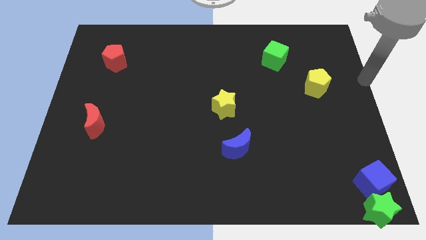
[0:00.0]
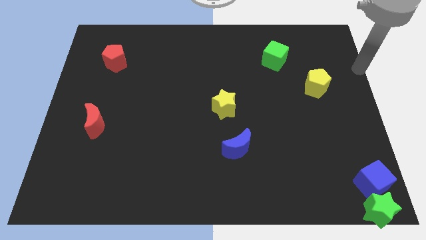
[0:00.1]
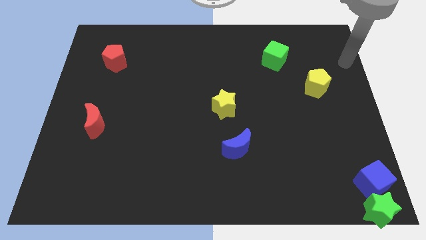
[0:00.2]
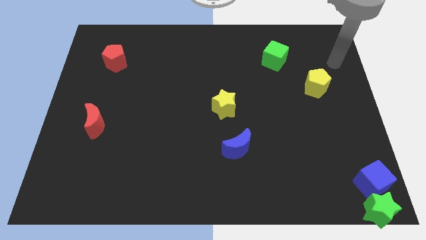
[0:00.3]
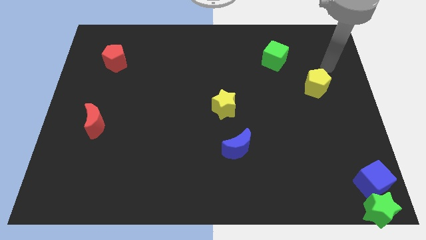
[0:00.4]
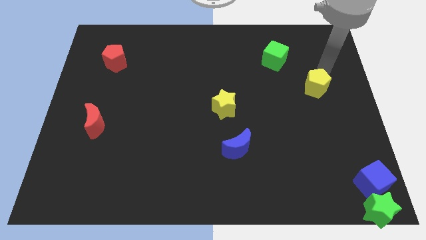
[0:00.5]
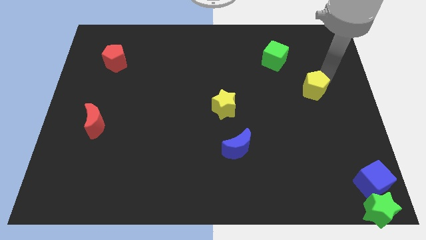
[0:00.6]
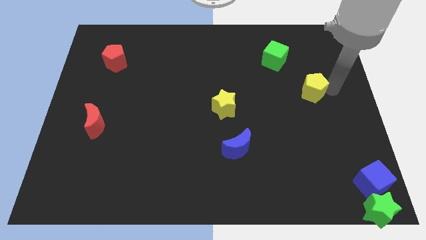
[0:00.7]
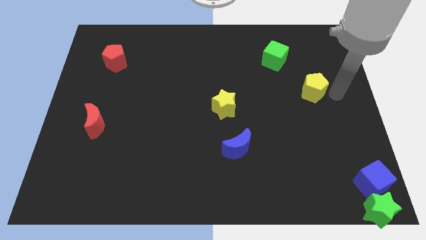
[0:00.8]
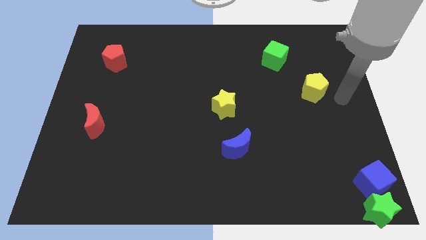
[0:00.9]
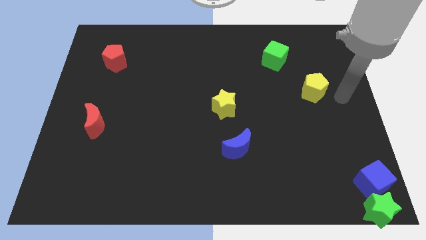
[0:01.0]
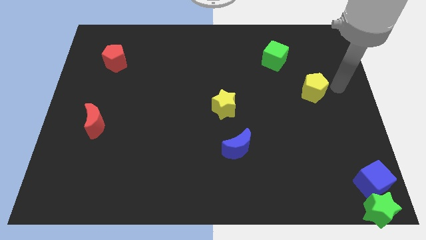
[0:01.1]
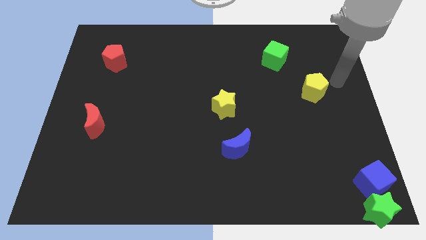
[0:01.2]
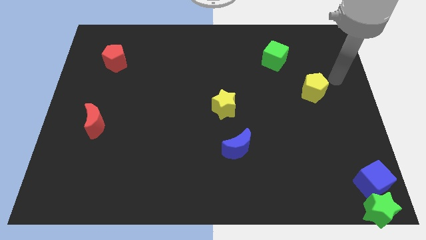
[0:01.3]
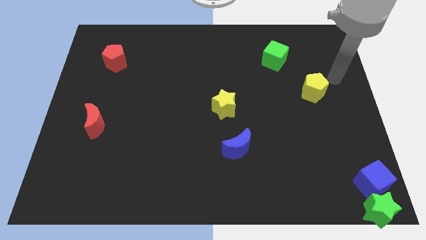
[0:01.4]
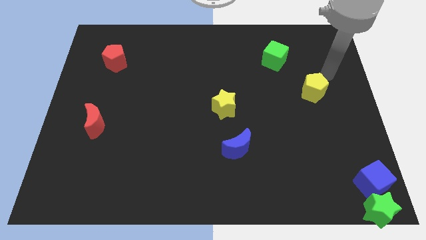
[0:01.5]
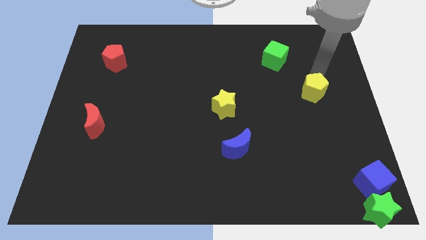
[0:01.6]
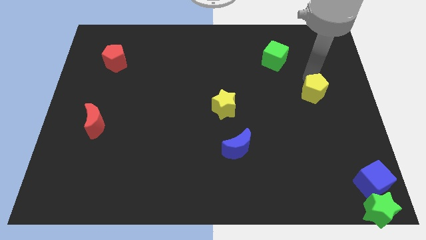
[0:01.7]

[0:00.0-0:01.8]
place the arm above the yellow pentagon

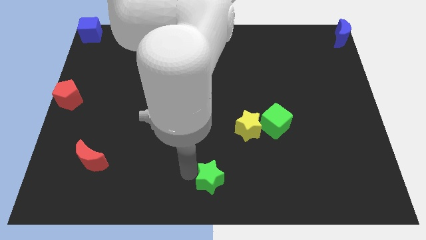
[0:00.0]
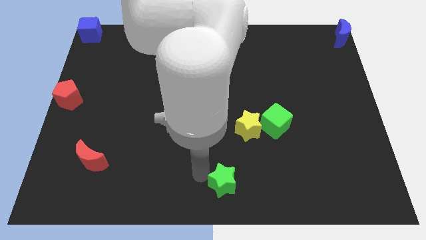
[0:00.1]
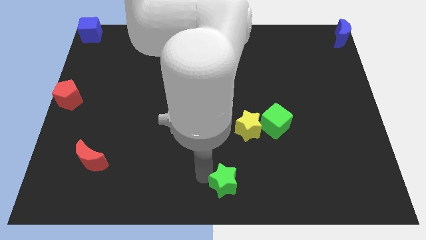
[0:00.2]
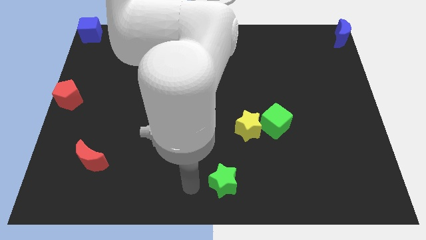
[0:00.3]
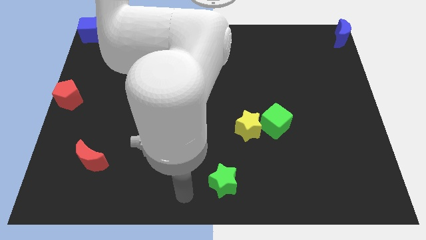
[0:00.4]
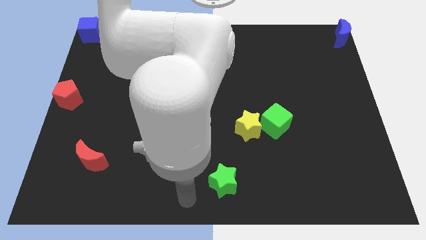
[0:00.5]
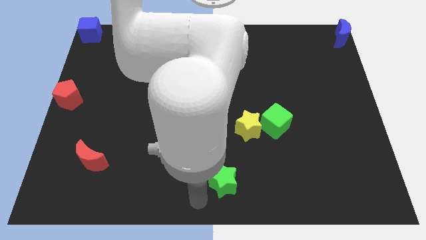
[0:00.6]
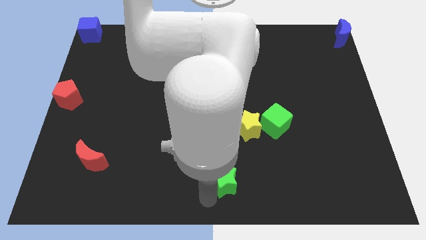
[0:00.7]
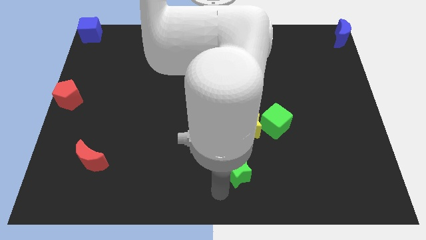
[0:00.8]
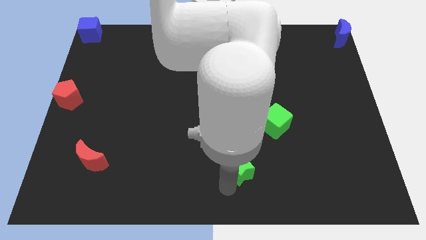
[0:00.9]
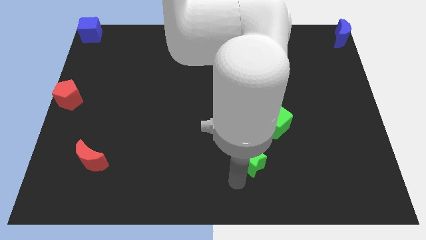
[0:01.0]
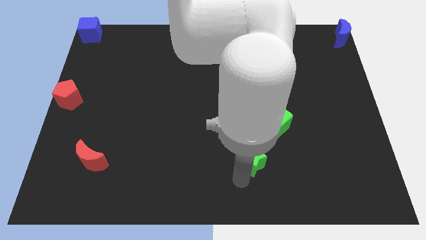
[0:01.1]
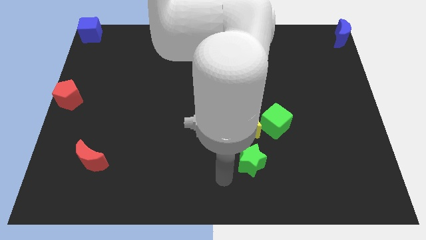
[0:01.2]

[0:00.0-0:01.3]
place the green star below the yellow star

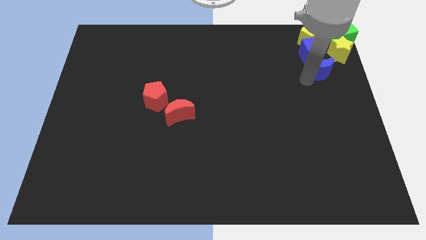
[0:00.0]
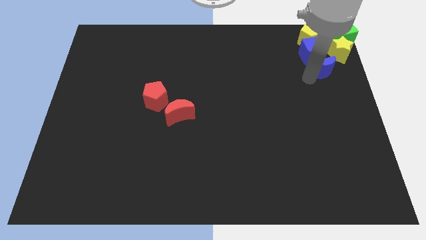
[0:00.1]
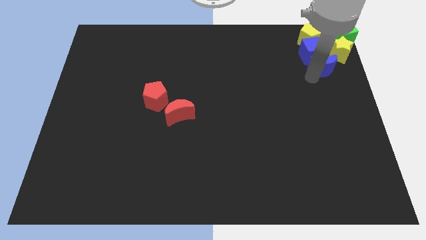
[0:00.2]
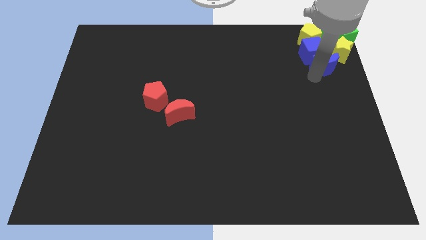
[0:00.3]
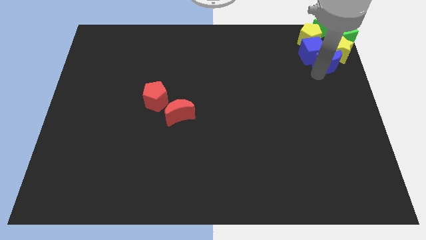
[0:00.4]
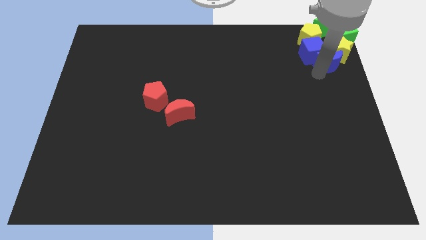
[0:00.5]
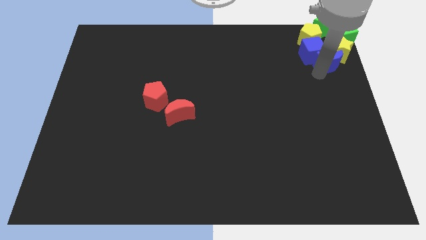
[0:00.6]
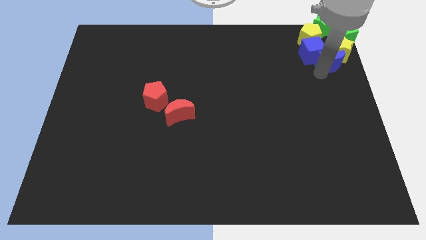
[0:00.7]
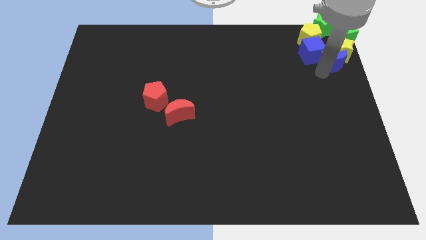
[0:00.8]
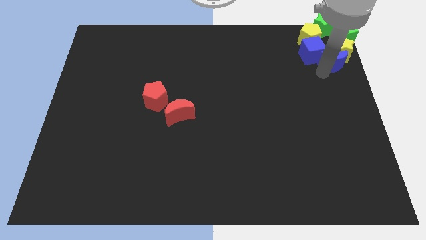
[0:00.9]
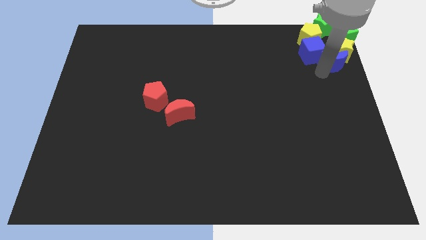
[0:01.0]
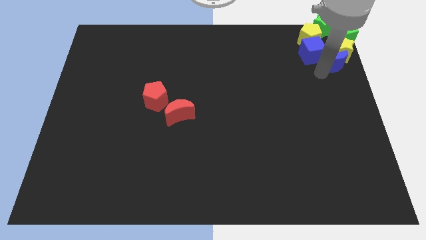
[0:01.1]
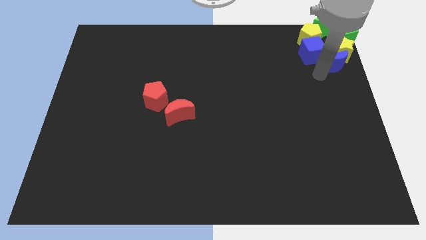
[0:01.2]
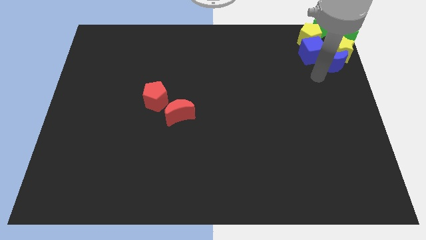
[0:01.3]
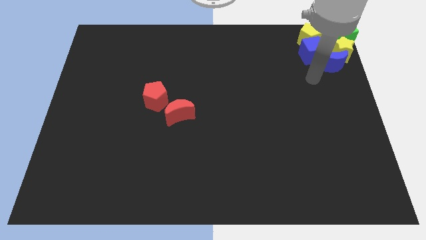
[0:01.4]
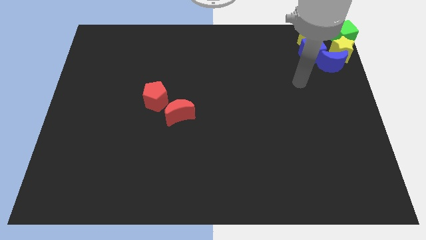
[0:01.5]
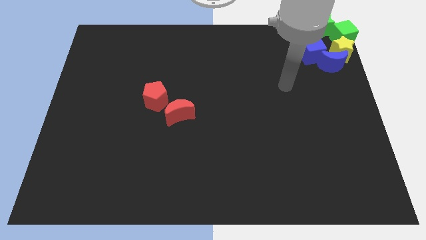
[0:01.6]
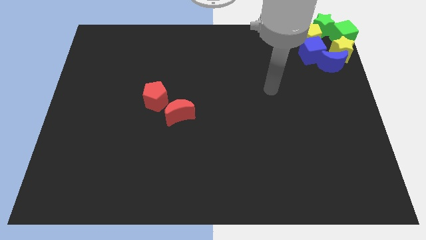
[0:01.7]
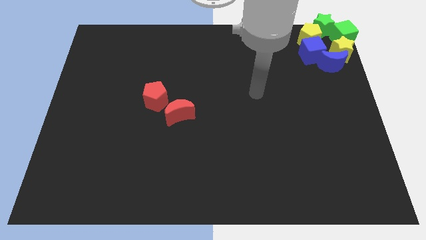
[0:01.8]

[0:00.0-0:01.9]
move the blue crescent to the group of blocks

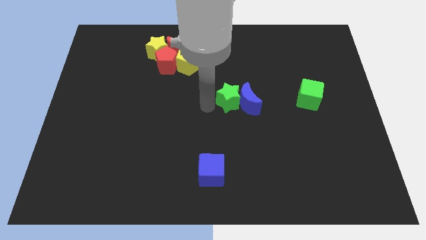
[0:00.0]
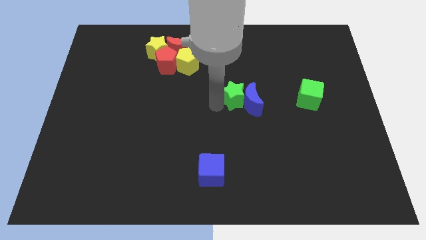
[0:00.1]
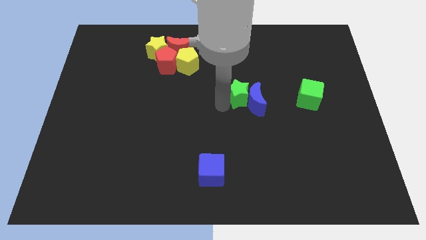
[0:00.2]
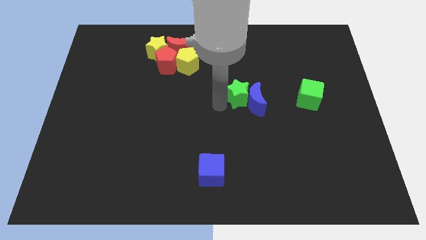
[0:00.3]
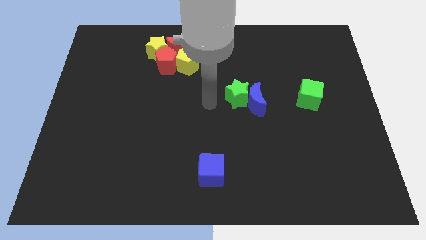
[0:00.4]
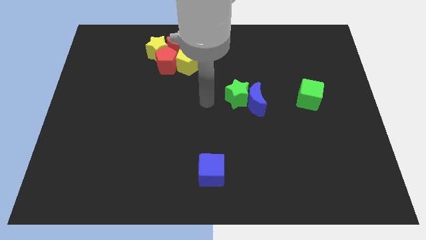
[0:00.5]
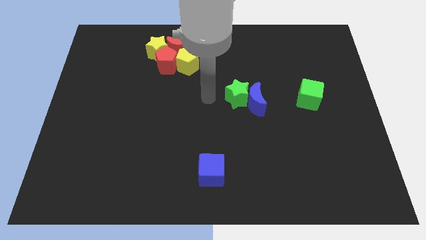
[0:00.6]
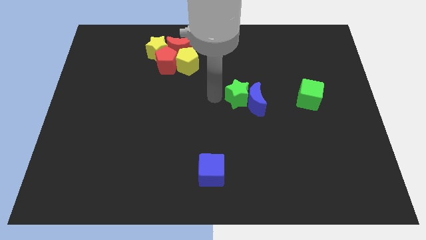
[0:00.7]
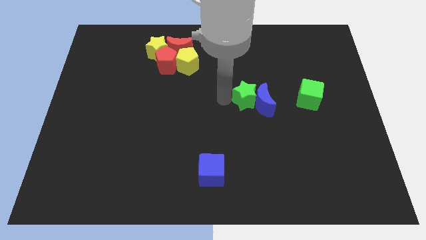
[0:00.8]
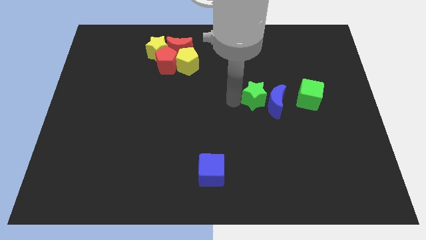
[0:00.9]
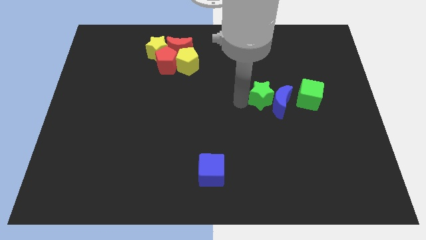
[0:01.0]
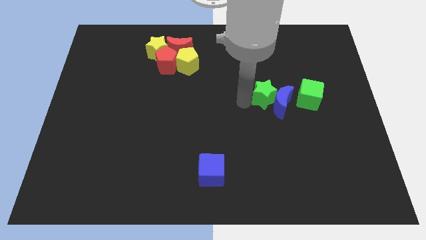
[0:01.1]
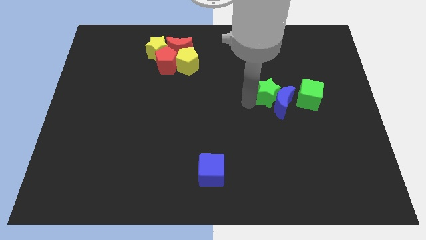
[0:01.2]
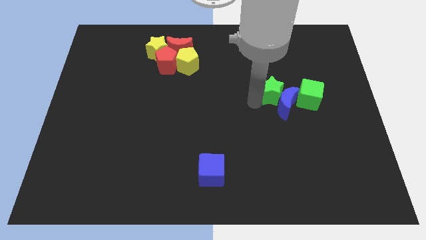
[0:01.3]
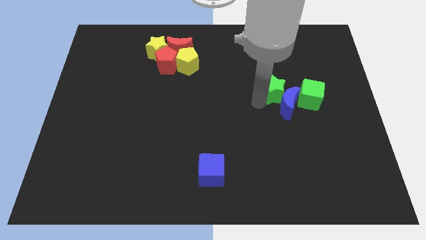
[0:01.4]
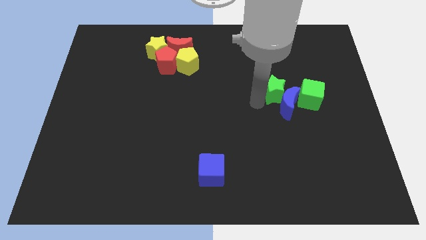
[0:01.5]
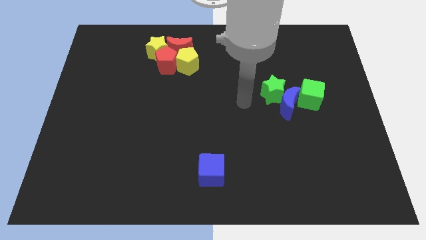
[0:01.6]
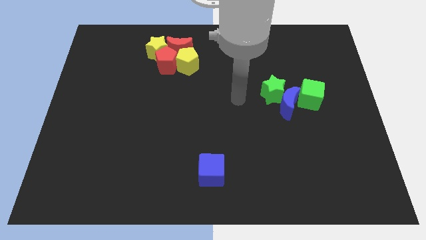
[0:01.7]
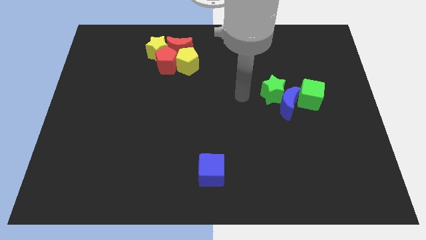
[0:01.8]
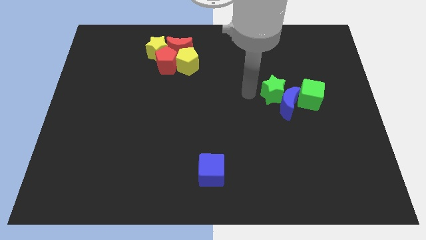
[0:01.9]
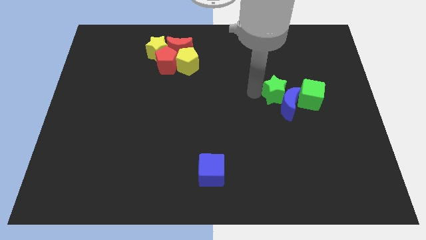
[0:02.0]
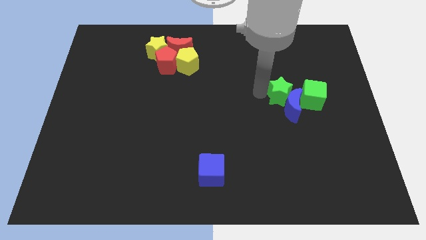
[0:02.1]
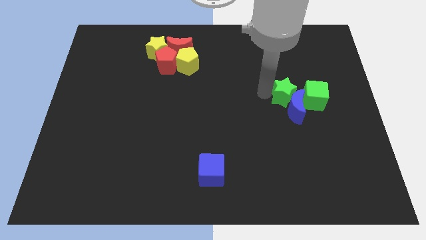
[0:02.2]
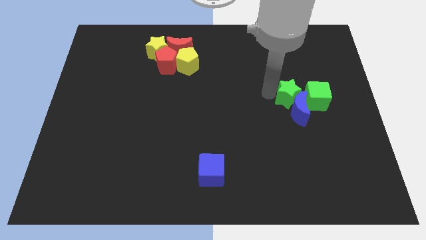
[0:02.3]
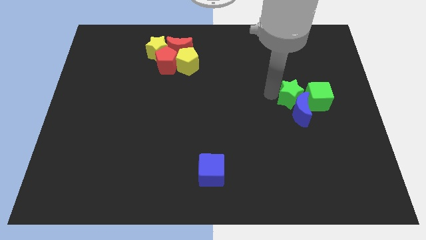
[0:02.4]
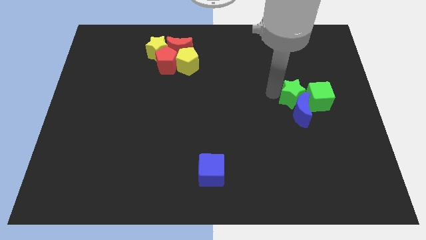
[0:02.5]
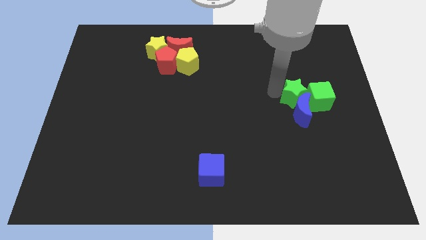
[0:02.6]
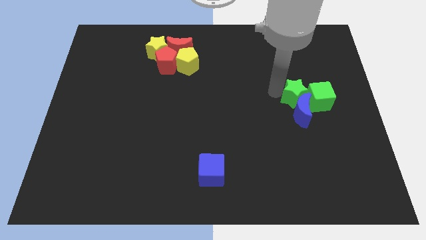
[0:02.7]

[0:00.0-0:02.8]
push the green blocks with blue moon to the right side

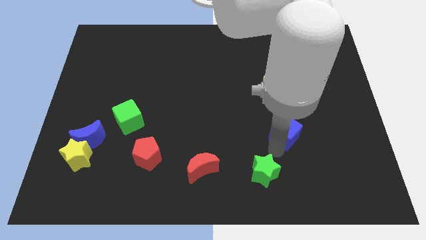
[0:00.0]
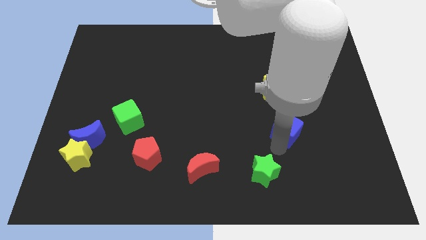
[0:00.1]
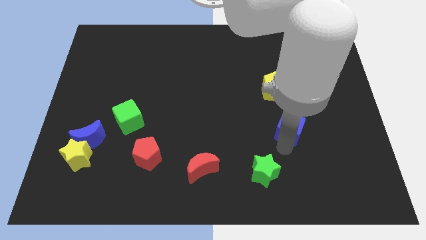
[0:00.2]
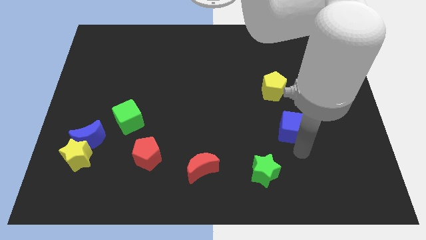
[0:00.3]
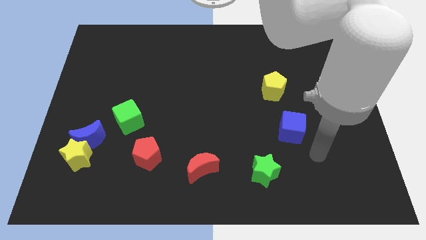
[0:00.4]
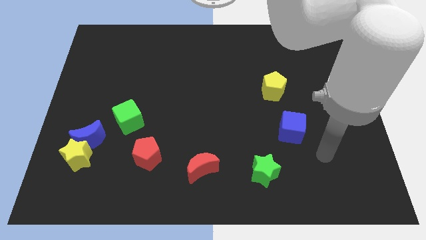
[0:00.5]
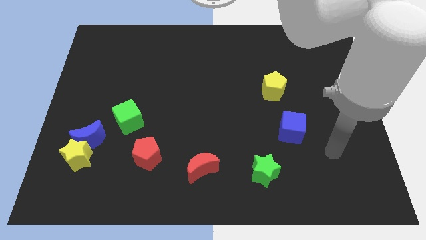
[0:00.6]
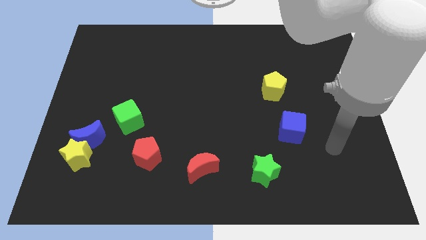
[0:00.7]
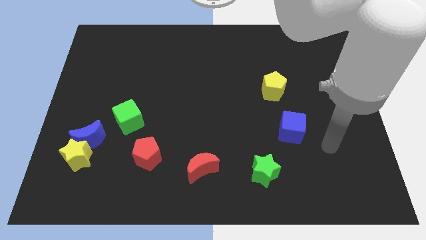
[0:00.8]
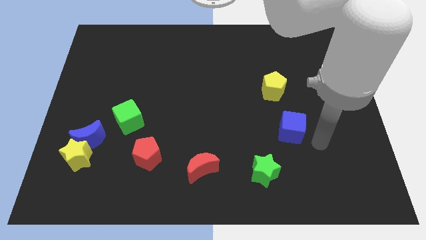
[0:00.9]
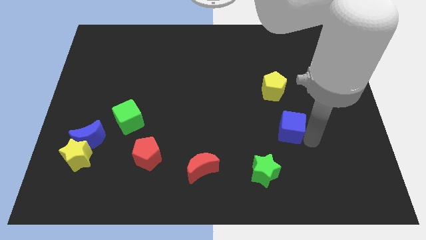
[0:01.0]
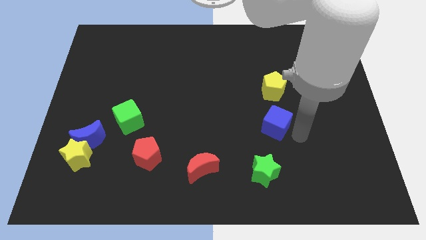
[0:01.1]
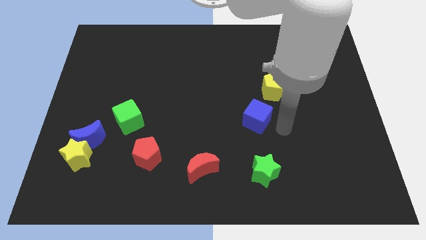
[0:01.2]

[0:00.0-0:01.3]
place blue cube at bottom left to yellow pentagon
